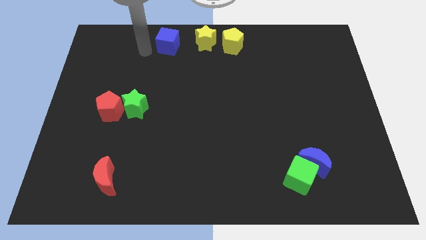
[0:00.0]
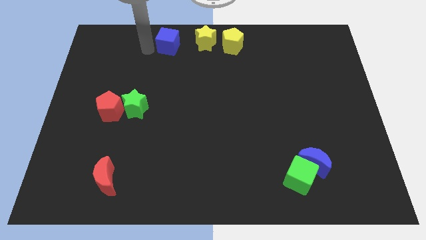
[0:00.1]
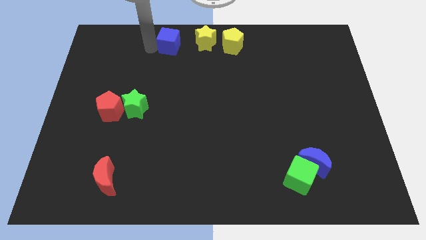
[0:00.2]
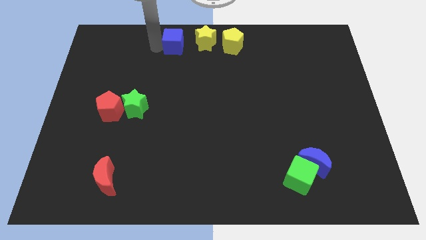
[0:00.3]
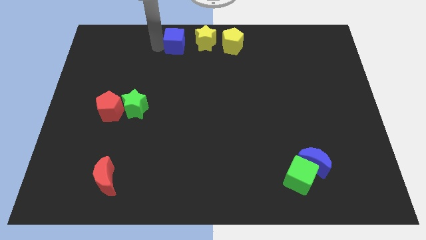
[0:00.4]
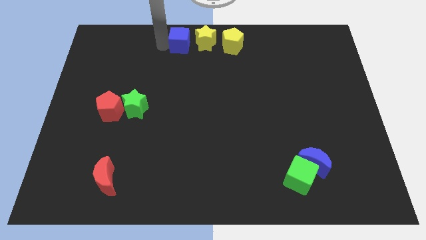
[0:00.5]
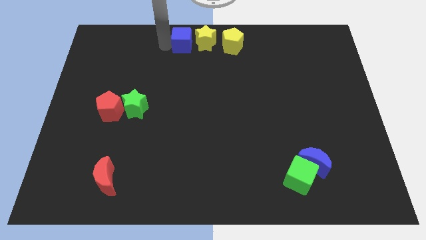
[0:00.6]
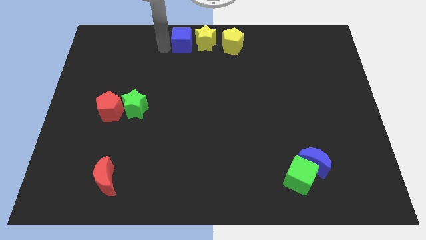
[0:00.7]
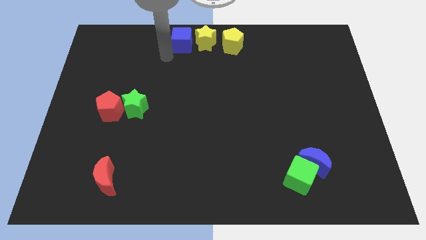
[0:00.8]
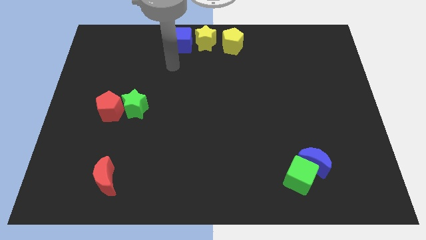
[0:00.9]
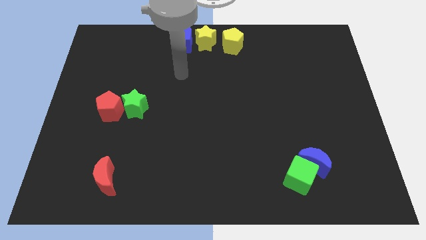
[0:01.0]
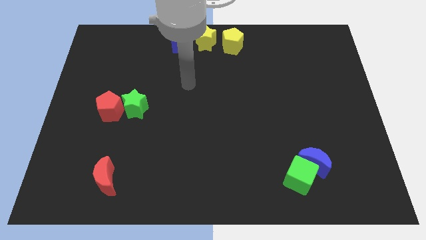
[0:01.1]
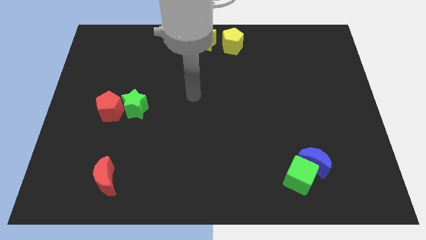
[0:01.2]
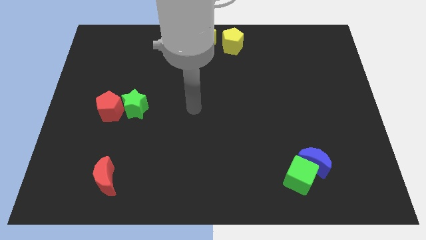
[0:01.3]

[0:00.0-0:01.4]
push the blue cube to the left of the yellow star

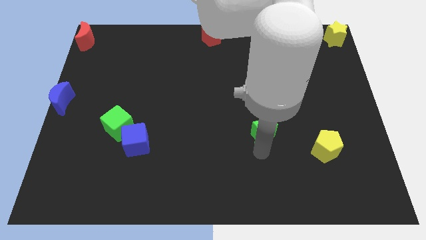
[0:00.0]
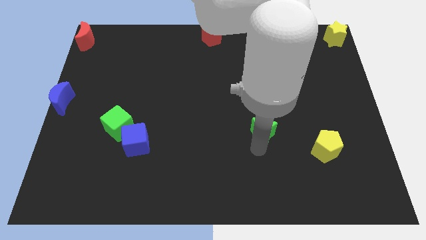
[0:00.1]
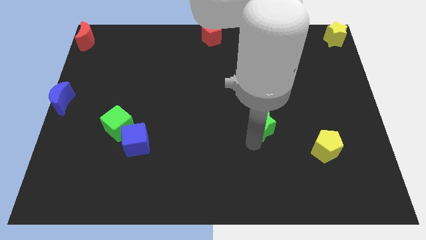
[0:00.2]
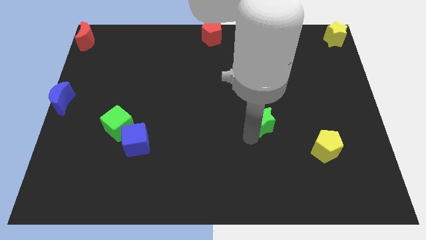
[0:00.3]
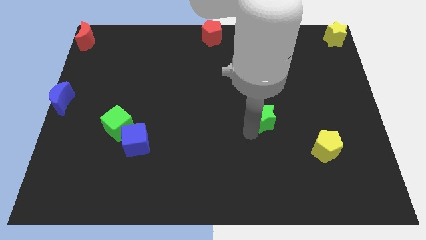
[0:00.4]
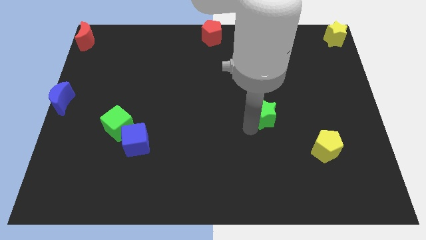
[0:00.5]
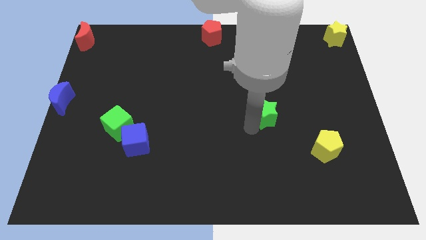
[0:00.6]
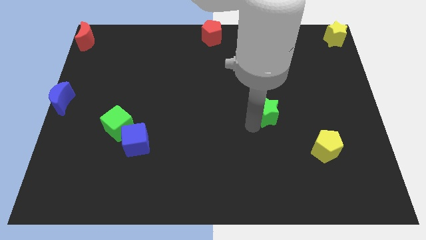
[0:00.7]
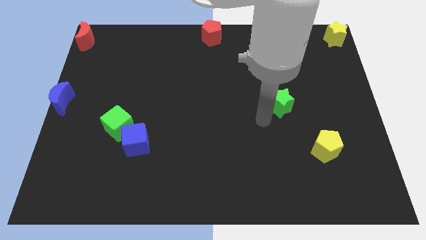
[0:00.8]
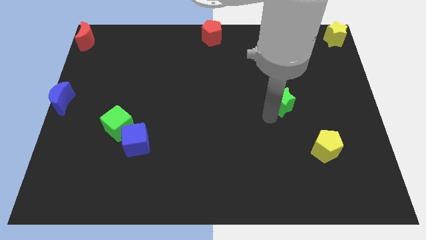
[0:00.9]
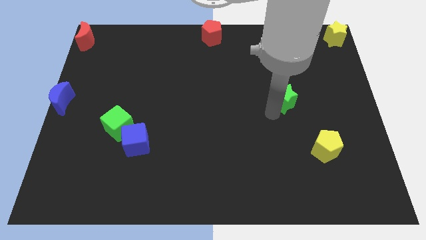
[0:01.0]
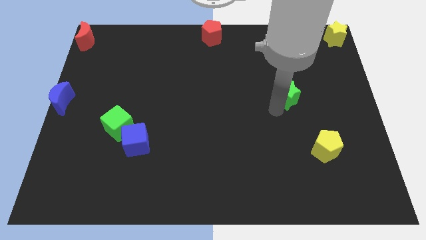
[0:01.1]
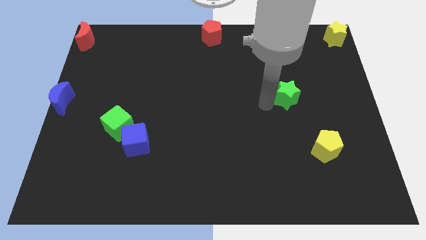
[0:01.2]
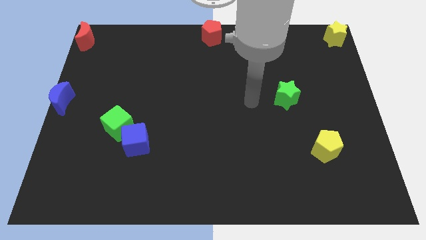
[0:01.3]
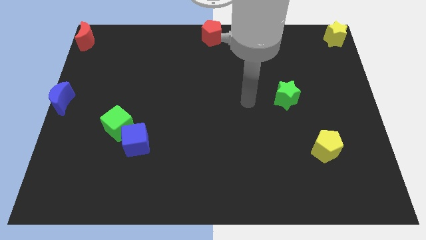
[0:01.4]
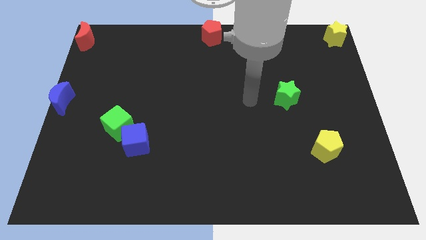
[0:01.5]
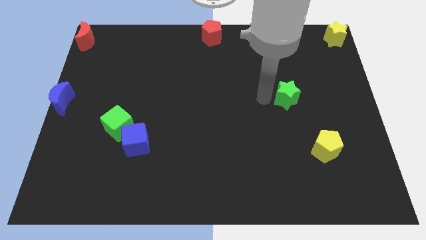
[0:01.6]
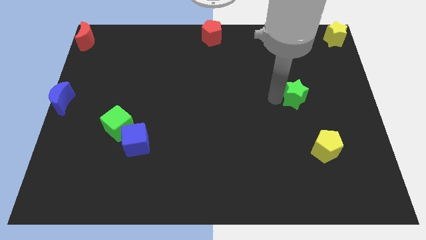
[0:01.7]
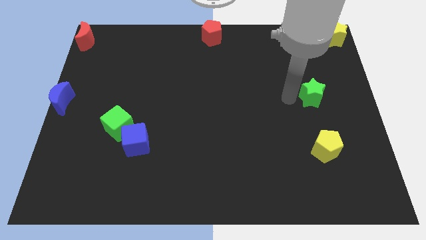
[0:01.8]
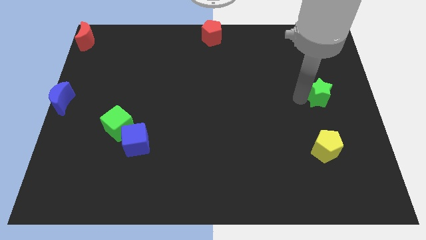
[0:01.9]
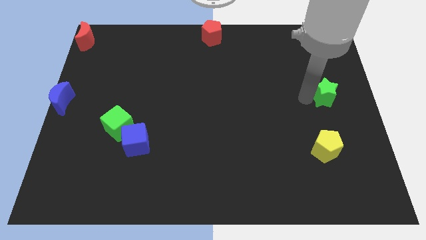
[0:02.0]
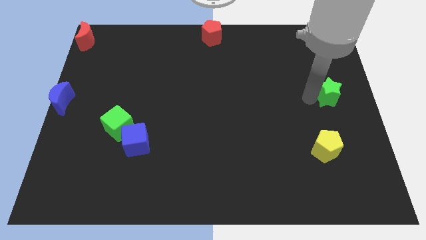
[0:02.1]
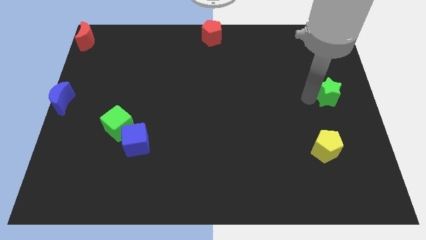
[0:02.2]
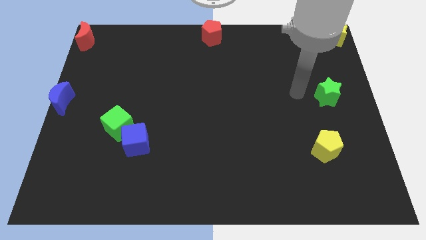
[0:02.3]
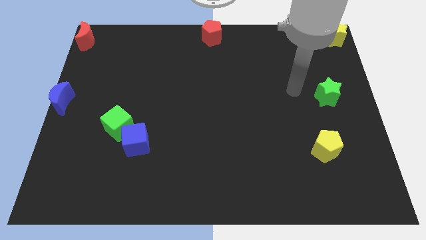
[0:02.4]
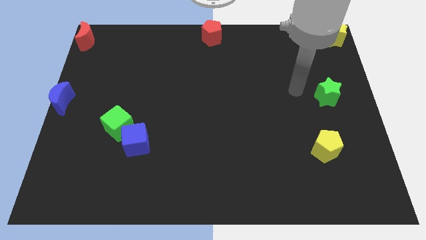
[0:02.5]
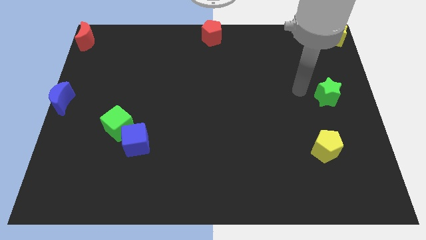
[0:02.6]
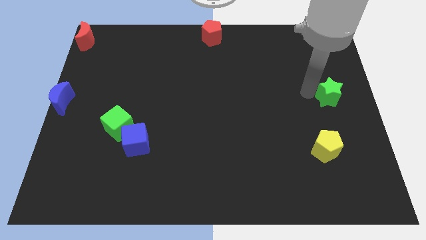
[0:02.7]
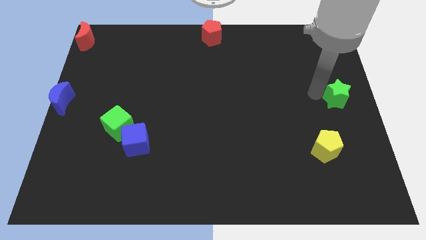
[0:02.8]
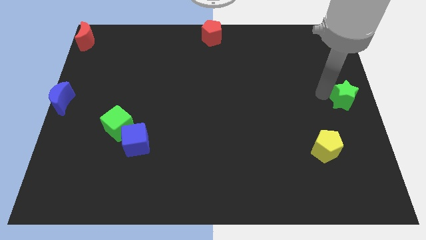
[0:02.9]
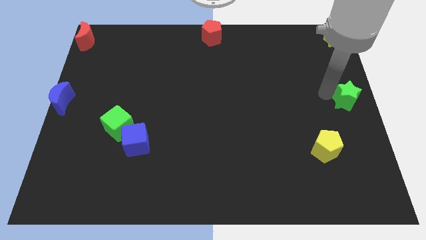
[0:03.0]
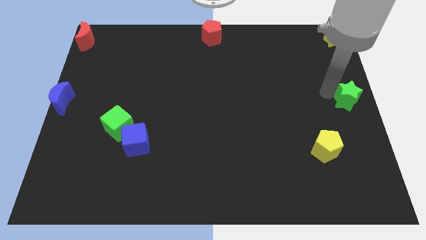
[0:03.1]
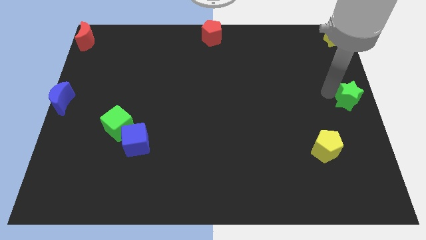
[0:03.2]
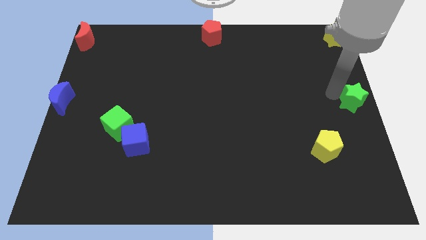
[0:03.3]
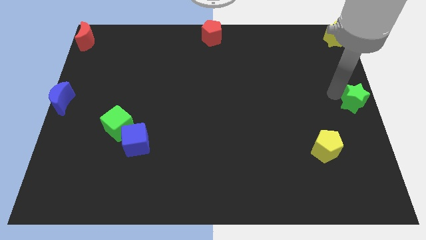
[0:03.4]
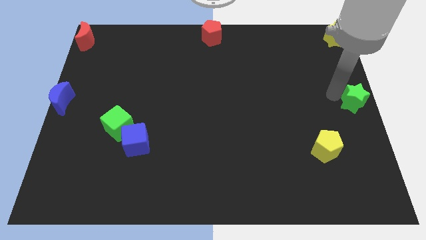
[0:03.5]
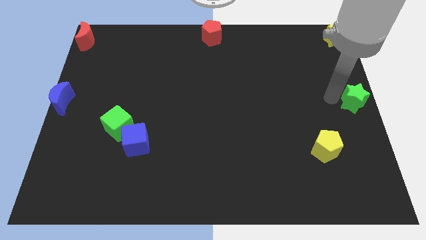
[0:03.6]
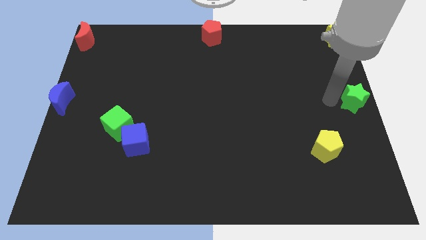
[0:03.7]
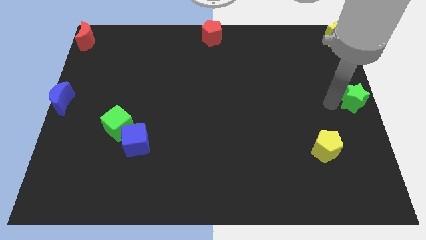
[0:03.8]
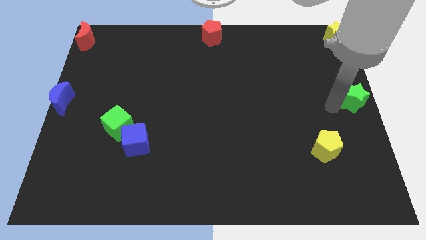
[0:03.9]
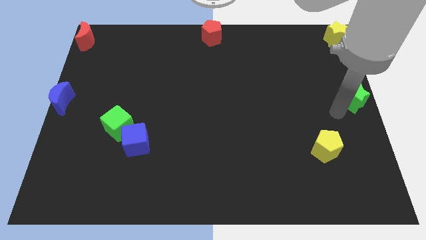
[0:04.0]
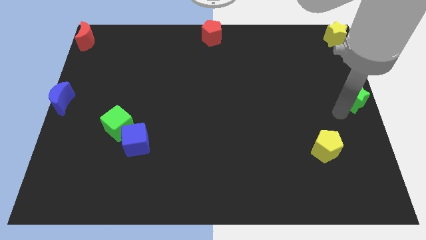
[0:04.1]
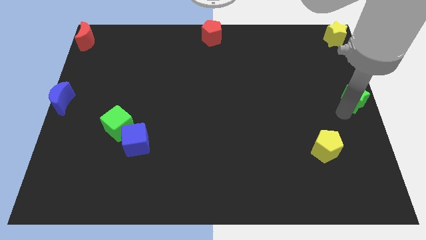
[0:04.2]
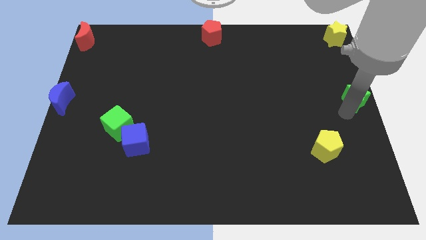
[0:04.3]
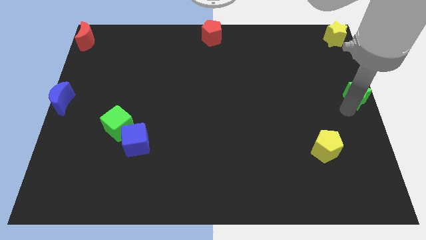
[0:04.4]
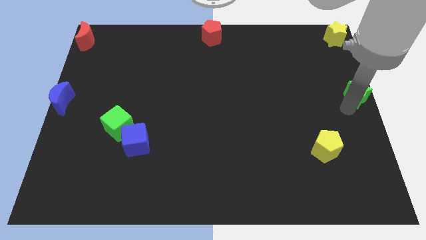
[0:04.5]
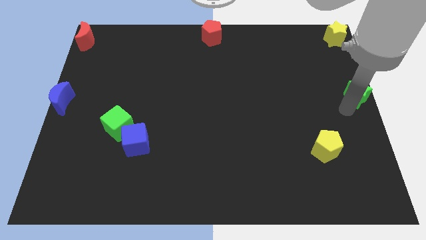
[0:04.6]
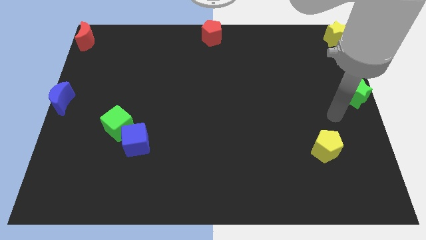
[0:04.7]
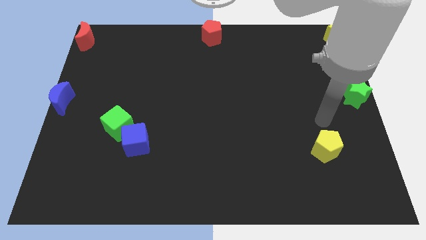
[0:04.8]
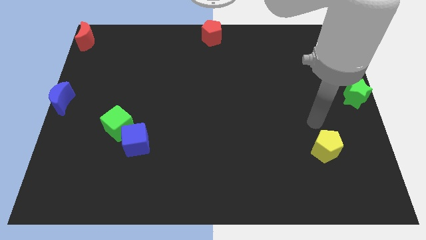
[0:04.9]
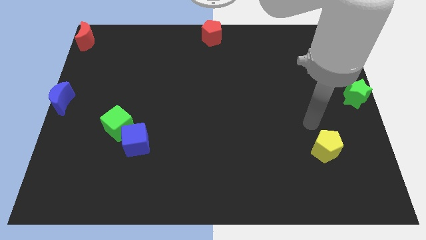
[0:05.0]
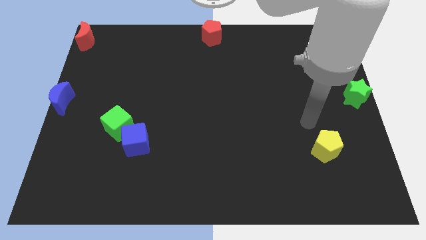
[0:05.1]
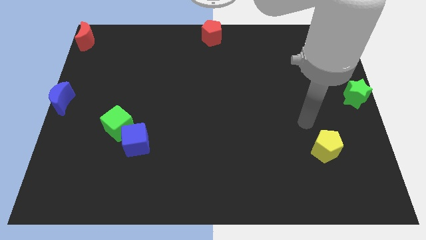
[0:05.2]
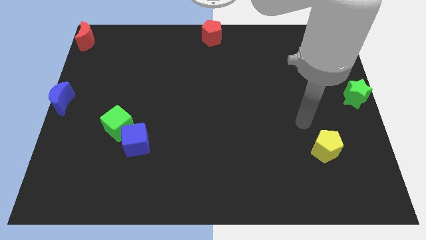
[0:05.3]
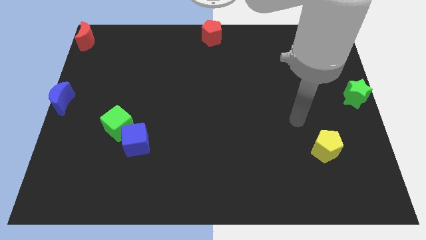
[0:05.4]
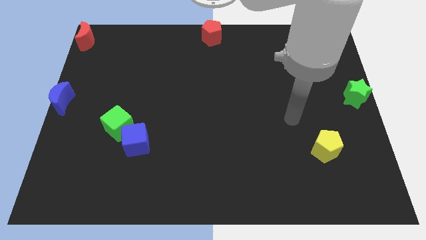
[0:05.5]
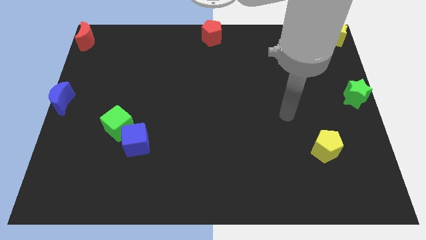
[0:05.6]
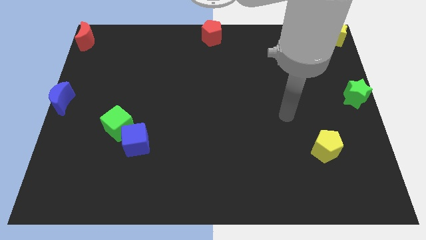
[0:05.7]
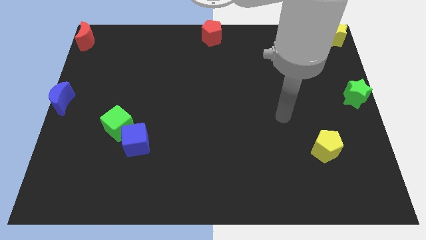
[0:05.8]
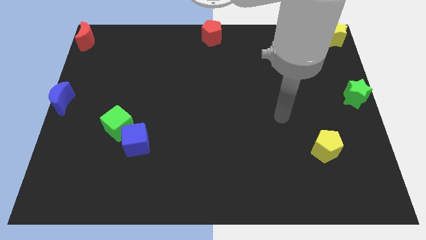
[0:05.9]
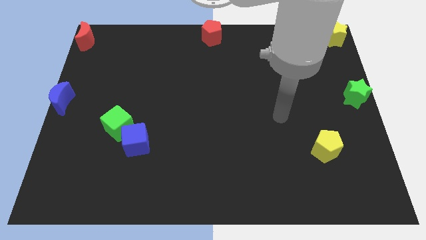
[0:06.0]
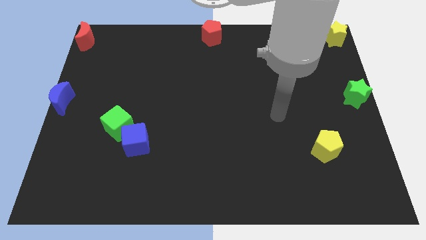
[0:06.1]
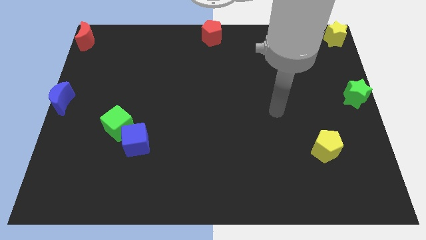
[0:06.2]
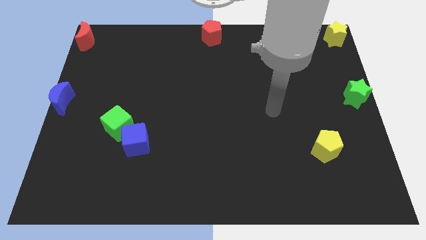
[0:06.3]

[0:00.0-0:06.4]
place the green star at the right center of the board

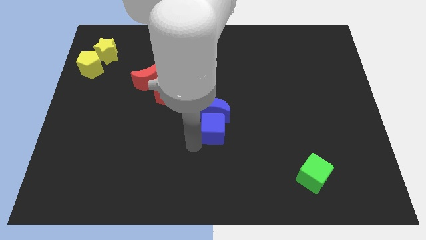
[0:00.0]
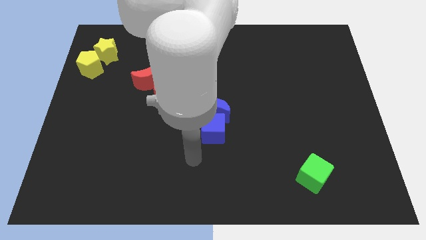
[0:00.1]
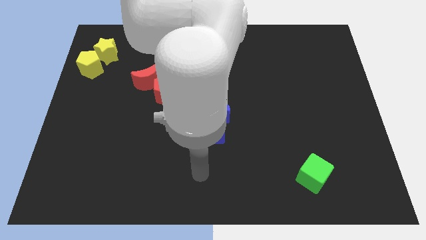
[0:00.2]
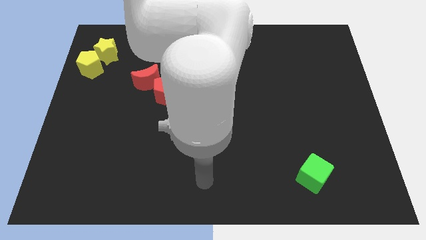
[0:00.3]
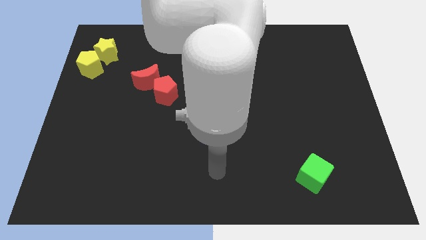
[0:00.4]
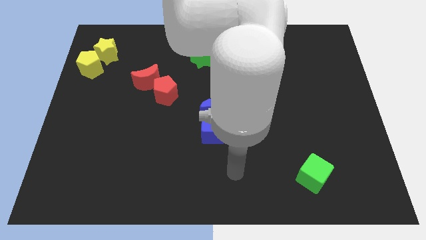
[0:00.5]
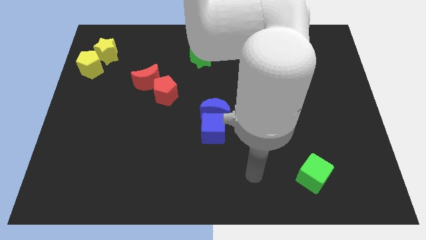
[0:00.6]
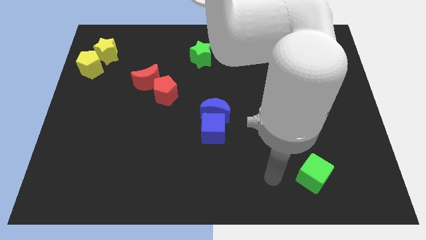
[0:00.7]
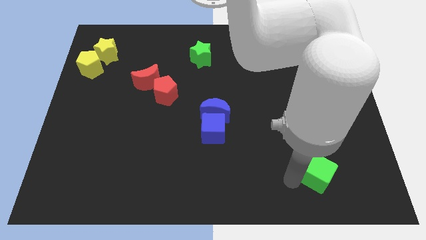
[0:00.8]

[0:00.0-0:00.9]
place your arm to the left of the green cube

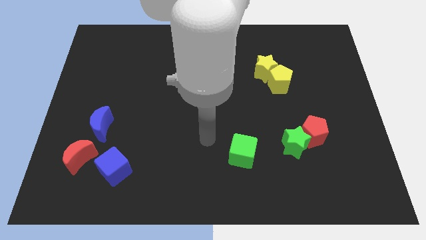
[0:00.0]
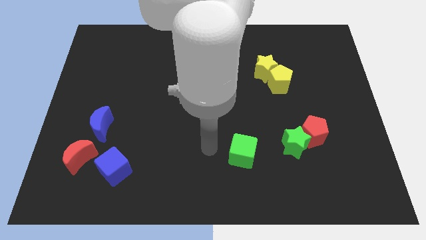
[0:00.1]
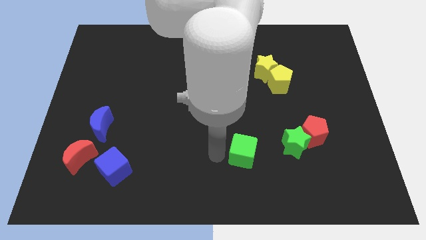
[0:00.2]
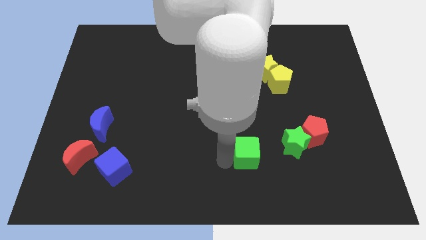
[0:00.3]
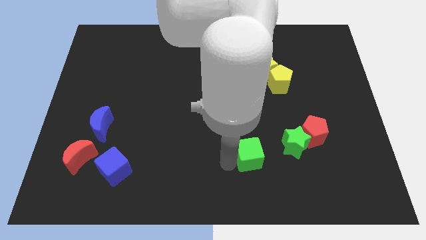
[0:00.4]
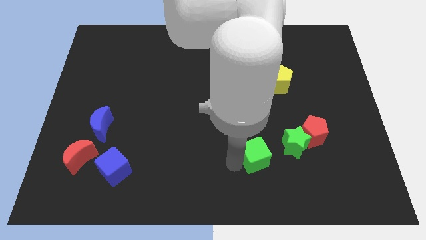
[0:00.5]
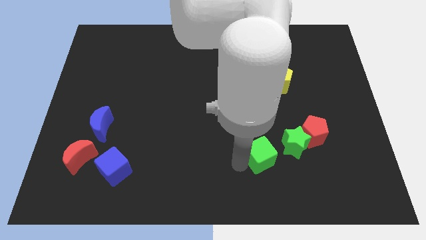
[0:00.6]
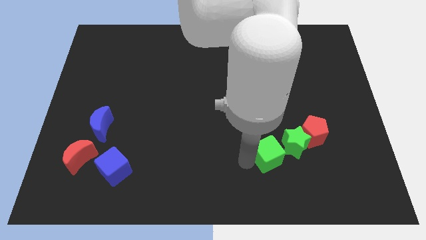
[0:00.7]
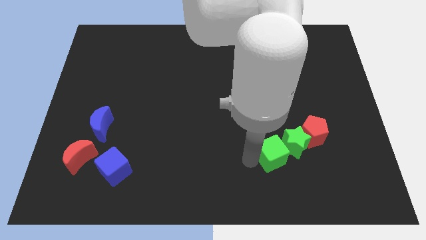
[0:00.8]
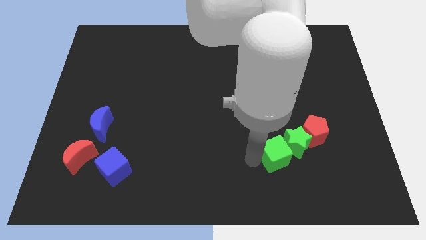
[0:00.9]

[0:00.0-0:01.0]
place green cube adjacent to green star
